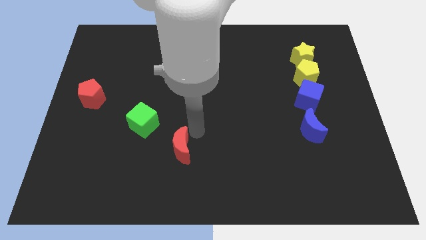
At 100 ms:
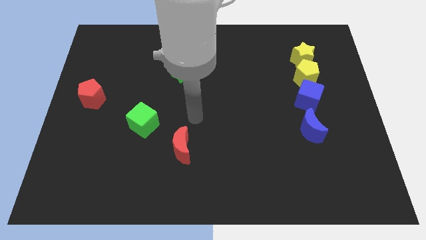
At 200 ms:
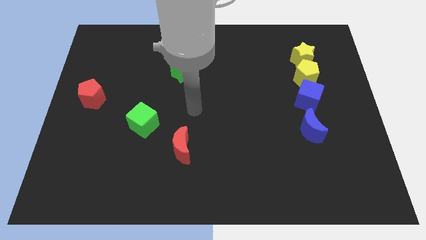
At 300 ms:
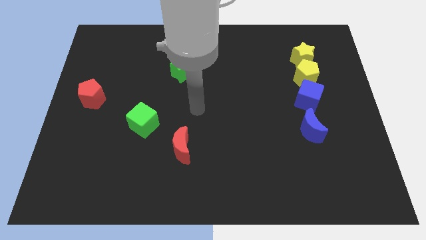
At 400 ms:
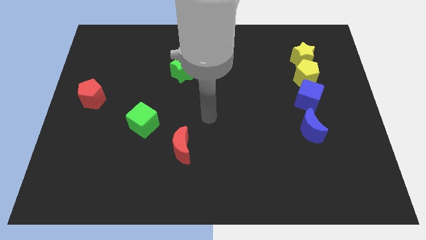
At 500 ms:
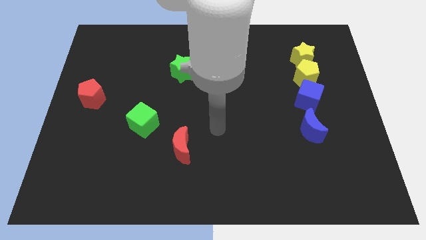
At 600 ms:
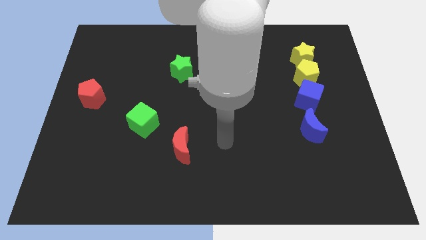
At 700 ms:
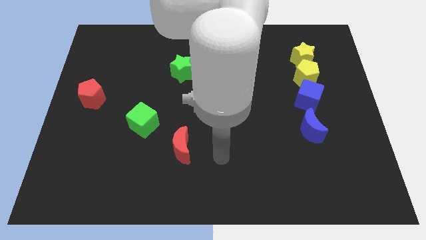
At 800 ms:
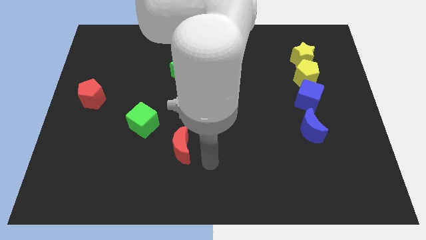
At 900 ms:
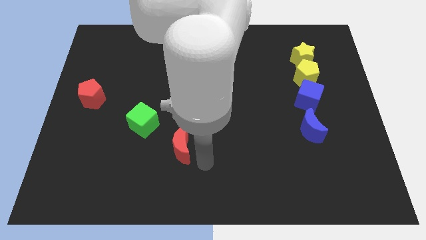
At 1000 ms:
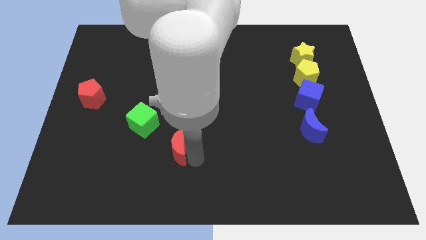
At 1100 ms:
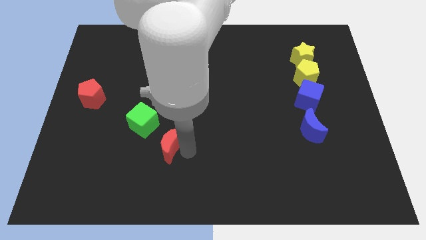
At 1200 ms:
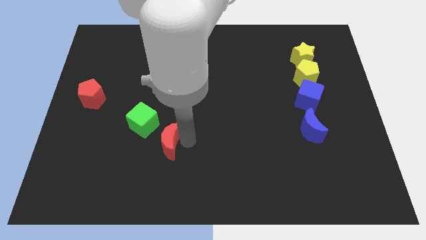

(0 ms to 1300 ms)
place red moon in diagonal to the green cube

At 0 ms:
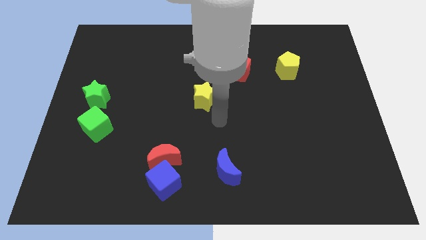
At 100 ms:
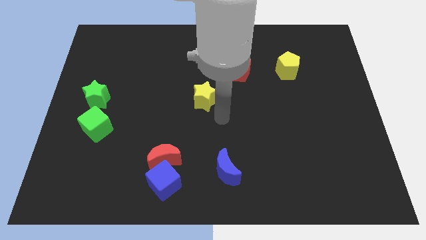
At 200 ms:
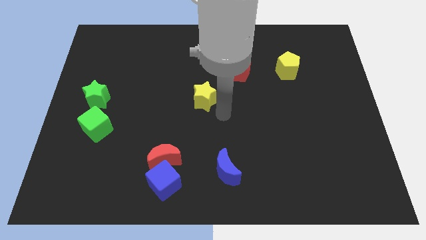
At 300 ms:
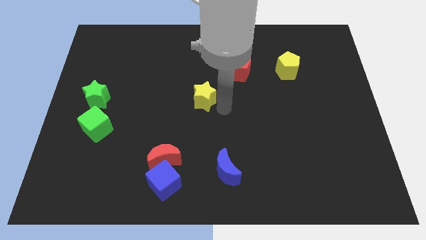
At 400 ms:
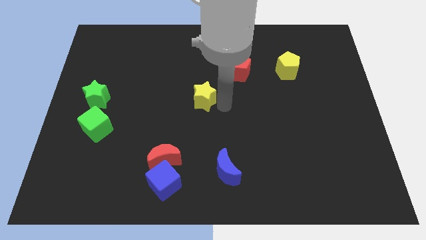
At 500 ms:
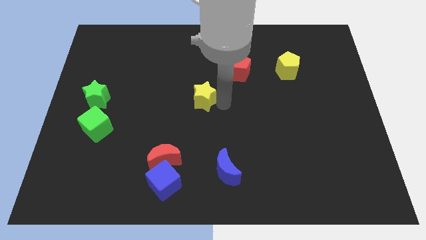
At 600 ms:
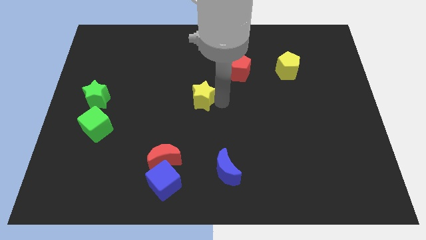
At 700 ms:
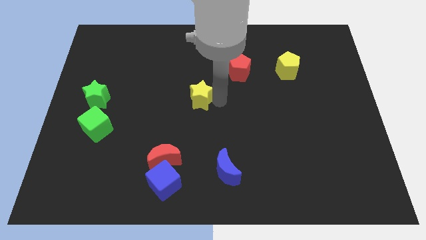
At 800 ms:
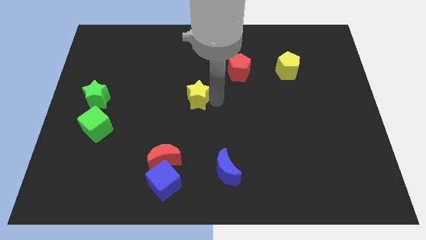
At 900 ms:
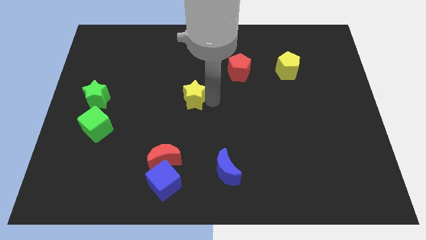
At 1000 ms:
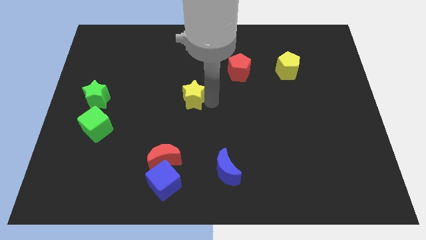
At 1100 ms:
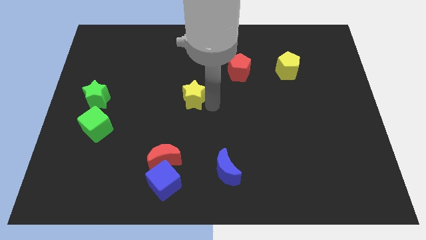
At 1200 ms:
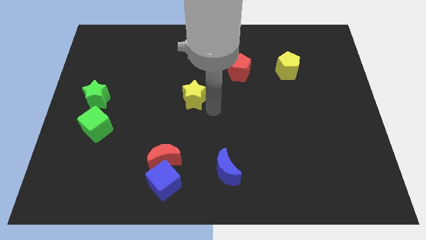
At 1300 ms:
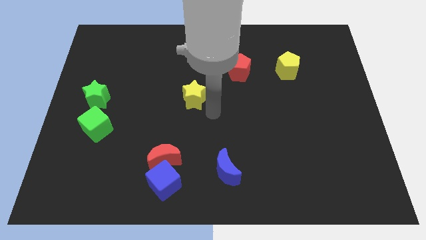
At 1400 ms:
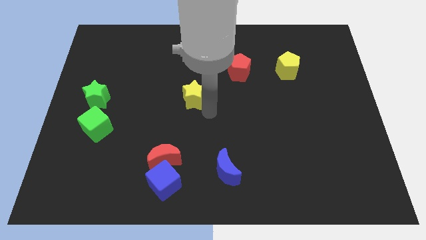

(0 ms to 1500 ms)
push the yellow star towards the green star

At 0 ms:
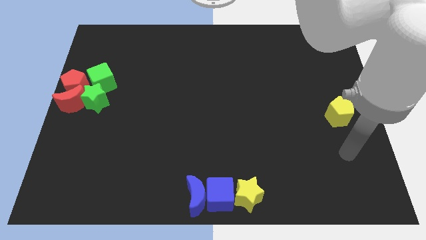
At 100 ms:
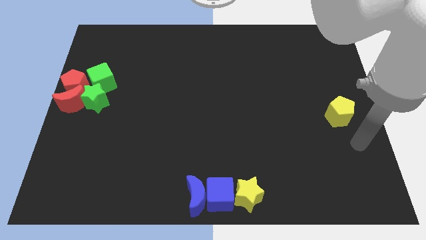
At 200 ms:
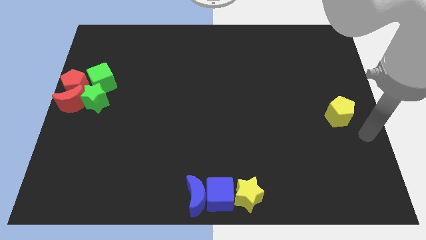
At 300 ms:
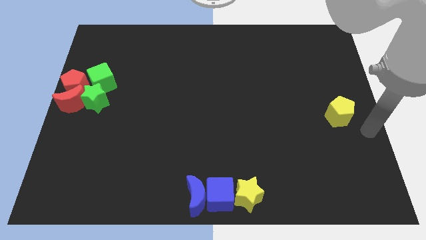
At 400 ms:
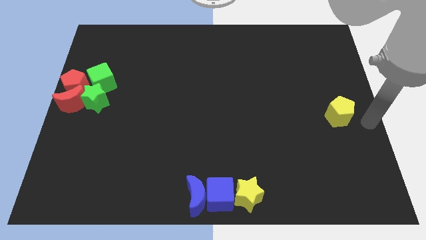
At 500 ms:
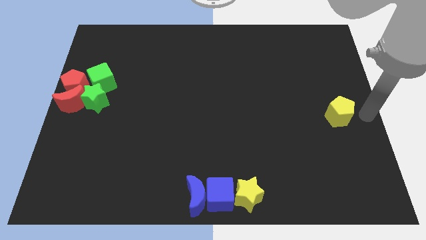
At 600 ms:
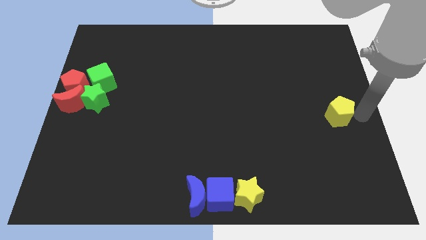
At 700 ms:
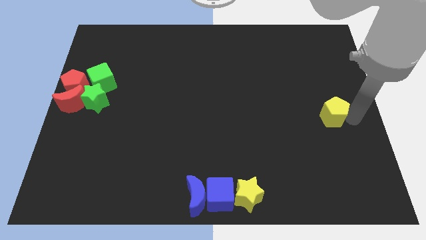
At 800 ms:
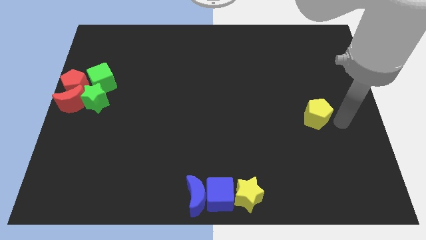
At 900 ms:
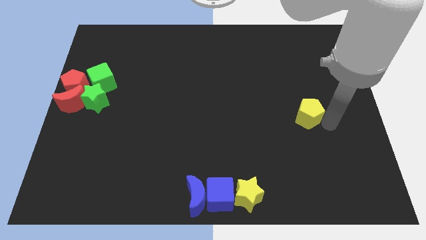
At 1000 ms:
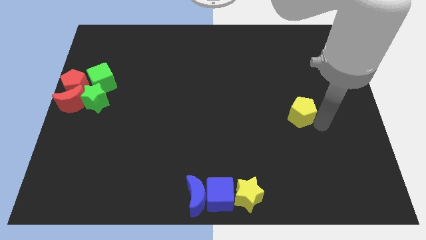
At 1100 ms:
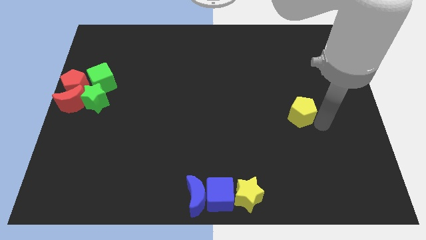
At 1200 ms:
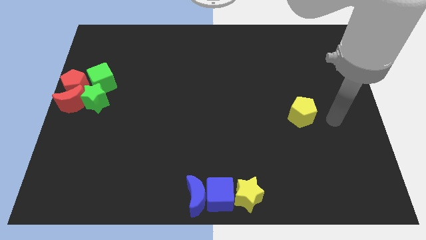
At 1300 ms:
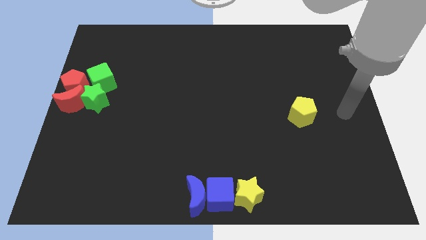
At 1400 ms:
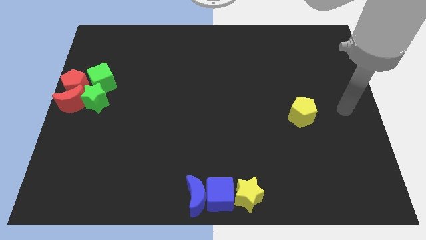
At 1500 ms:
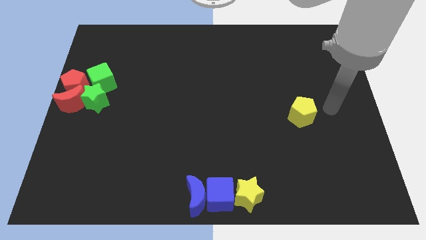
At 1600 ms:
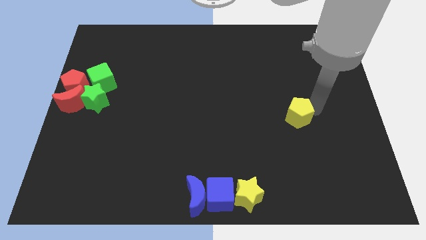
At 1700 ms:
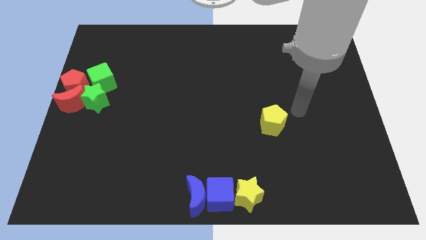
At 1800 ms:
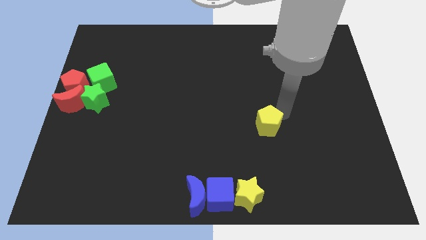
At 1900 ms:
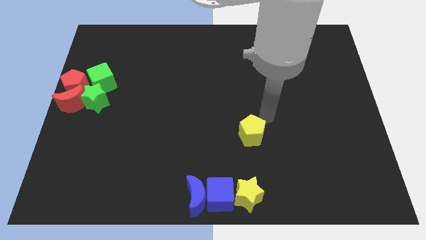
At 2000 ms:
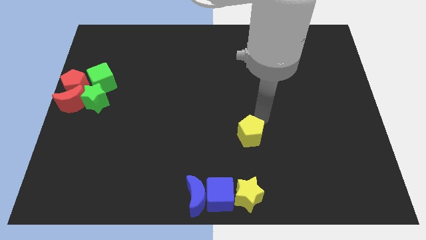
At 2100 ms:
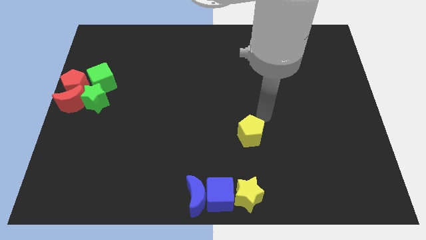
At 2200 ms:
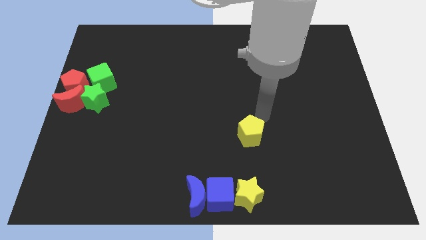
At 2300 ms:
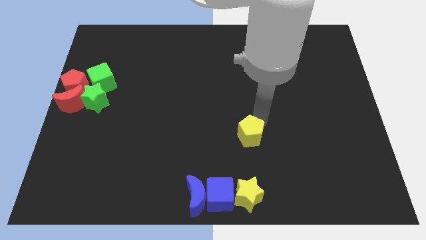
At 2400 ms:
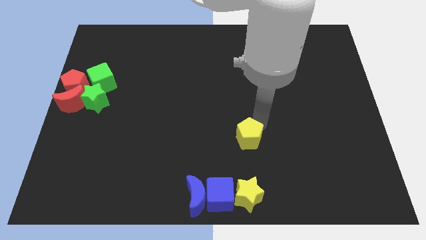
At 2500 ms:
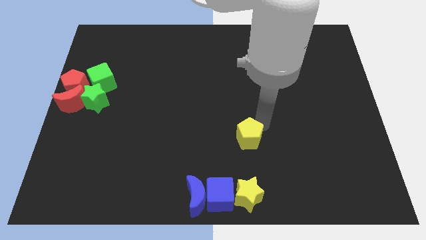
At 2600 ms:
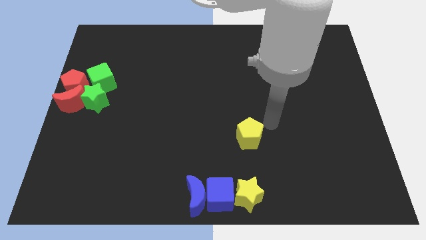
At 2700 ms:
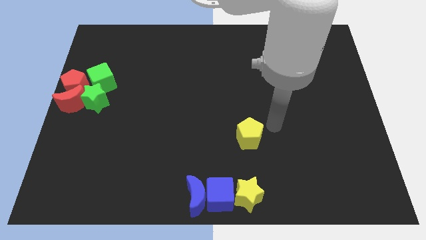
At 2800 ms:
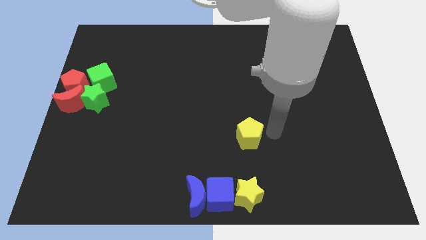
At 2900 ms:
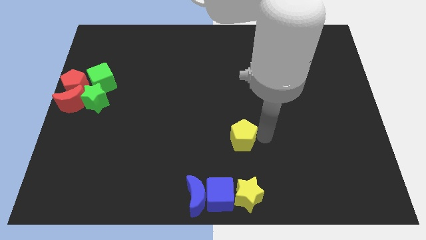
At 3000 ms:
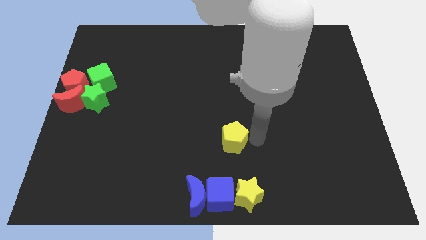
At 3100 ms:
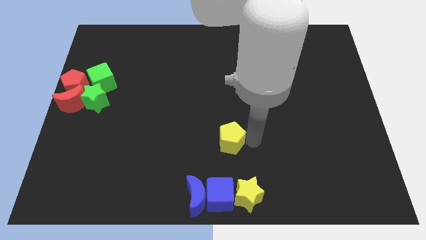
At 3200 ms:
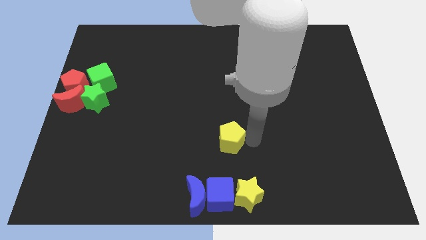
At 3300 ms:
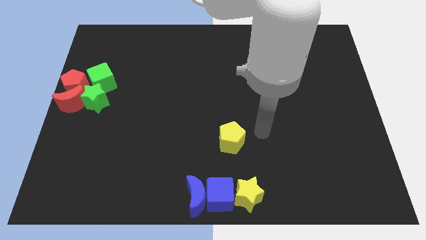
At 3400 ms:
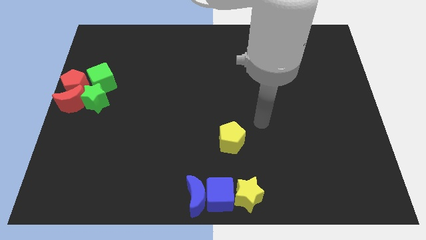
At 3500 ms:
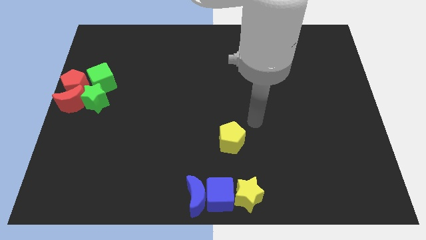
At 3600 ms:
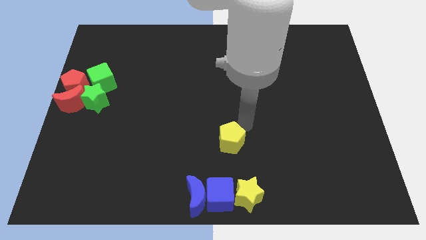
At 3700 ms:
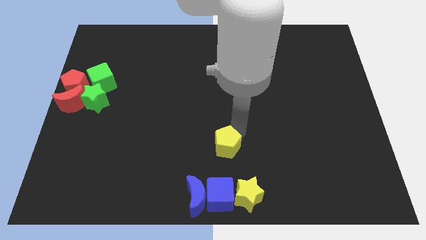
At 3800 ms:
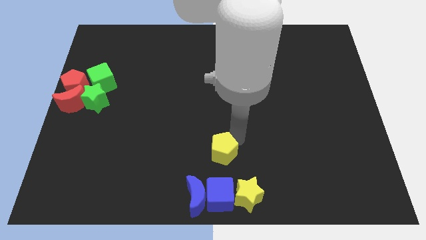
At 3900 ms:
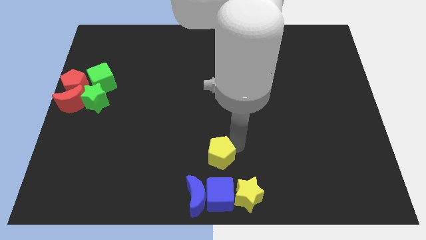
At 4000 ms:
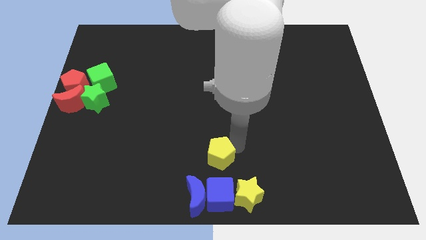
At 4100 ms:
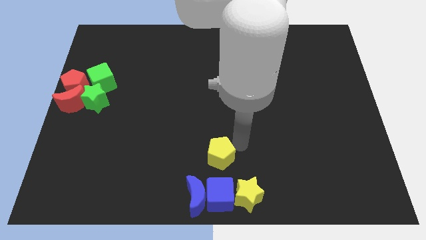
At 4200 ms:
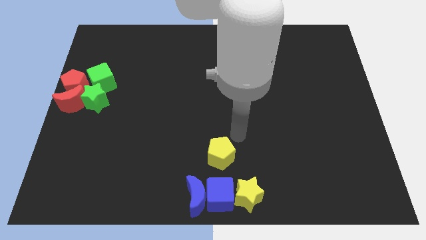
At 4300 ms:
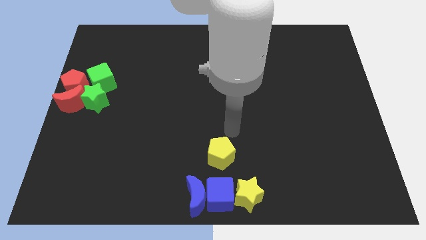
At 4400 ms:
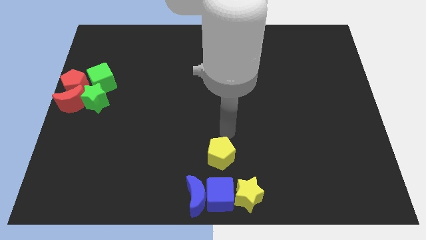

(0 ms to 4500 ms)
slide the yellow pentagon above the horizontal line of blocks at the bottom center of the table

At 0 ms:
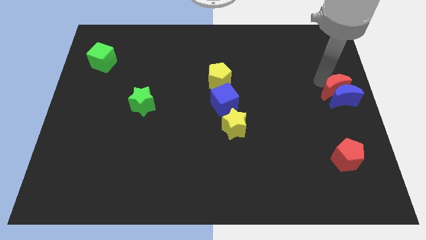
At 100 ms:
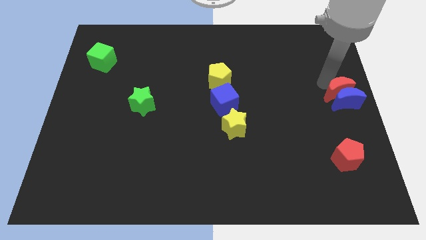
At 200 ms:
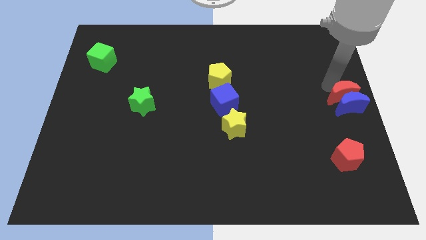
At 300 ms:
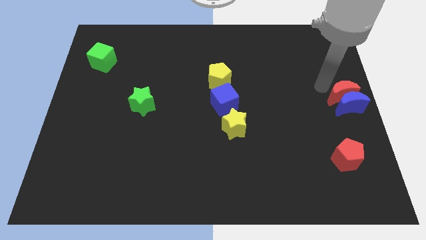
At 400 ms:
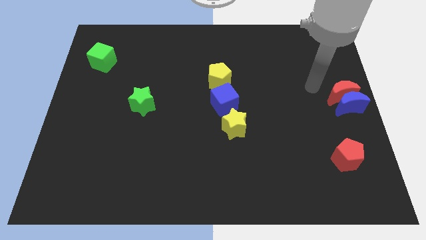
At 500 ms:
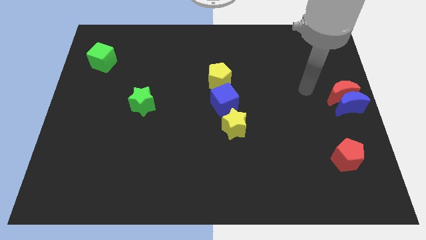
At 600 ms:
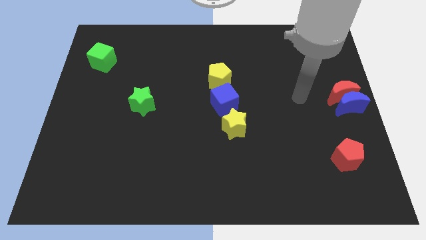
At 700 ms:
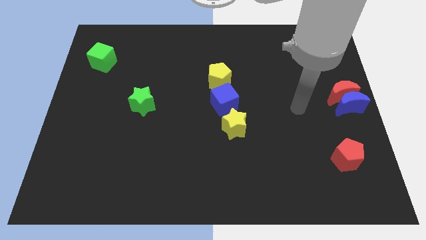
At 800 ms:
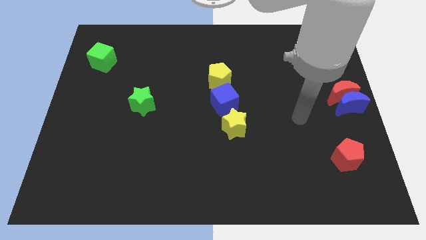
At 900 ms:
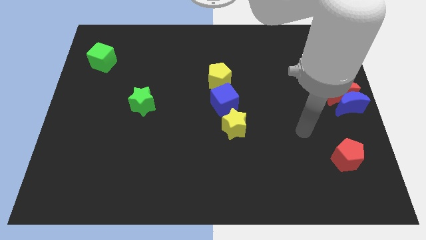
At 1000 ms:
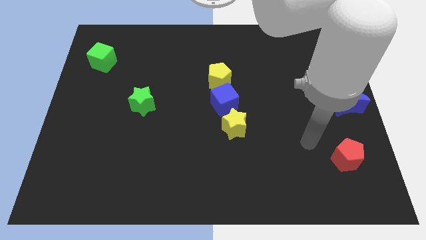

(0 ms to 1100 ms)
place the red and blue crescents at center right of the board

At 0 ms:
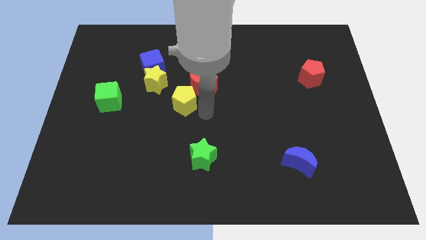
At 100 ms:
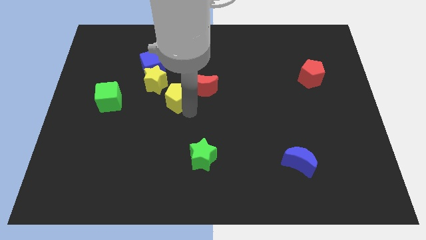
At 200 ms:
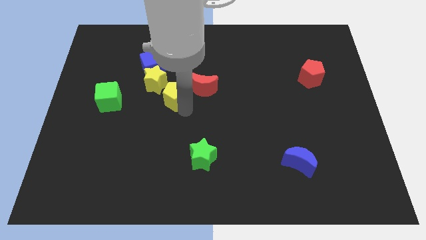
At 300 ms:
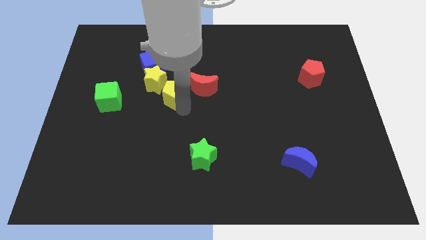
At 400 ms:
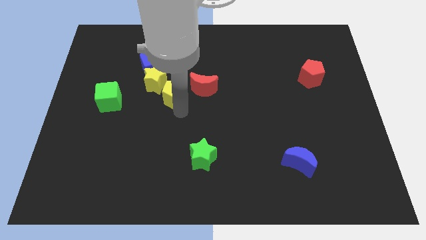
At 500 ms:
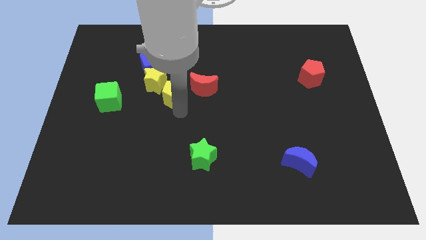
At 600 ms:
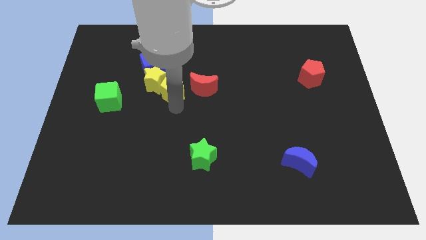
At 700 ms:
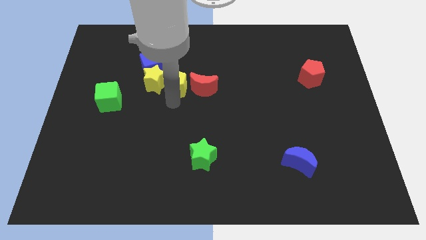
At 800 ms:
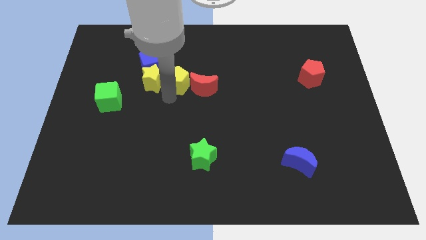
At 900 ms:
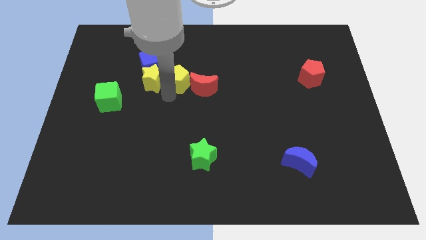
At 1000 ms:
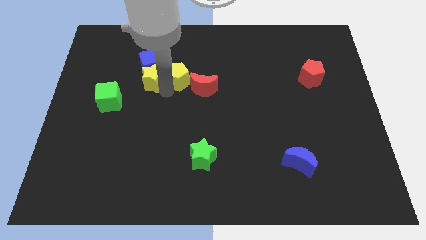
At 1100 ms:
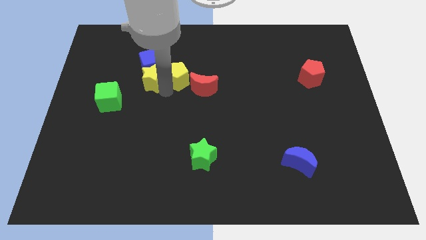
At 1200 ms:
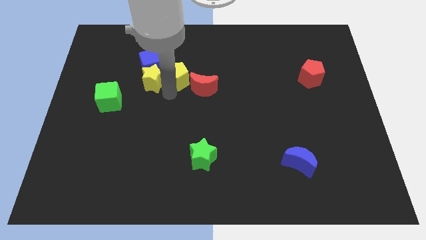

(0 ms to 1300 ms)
place the yellow pentagon into the yellow star
